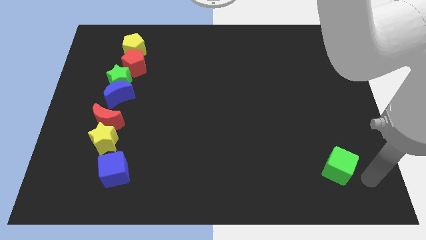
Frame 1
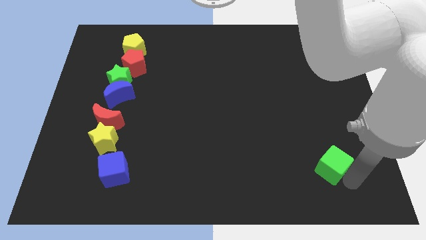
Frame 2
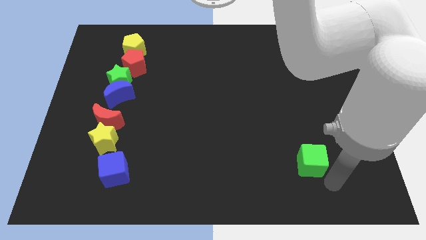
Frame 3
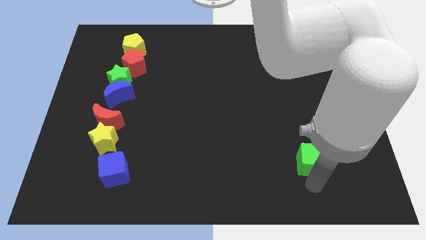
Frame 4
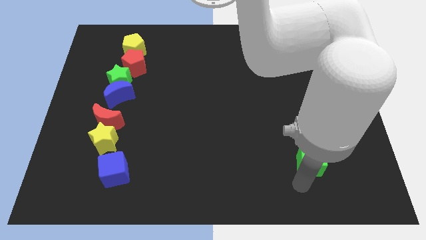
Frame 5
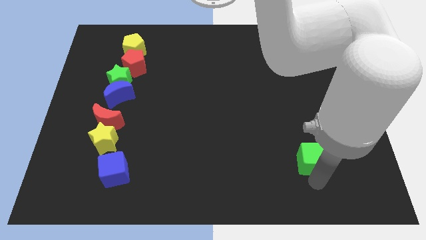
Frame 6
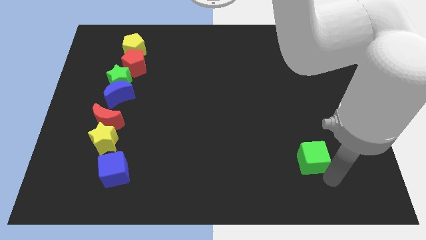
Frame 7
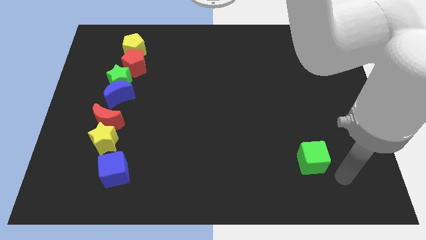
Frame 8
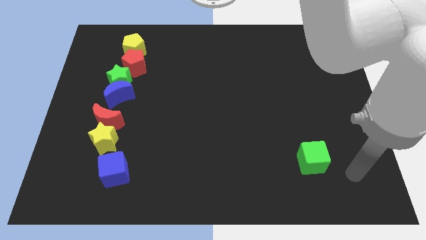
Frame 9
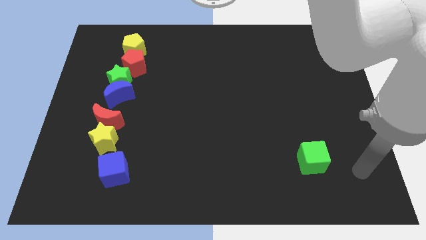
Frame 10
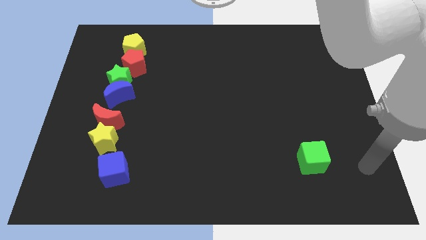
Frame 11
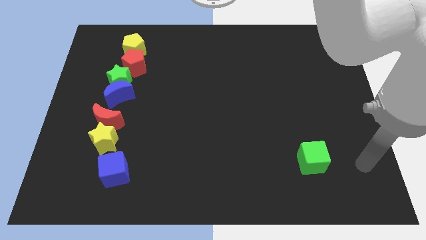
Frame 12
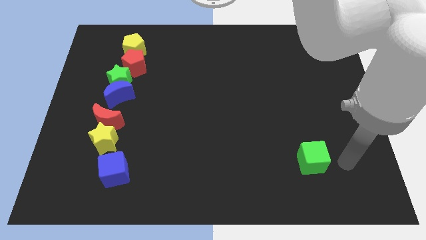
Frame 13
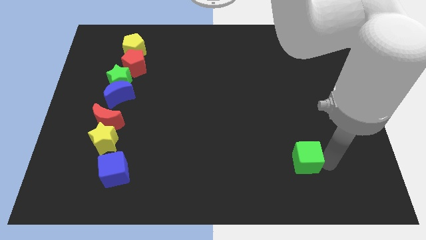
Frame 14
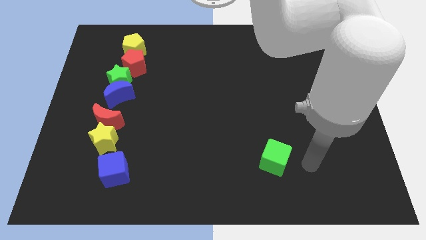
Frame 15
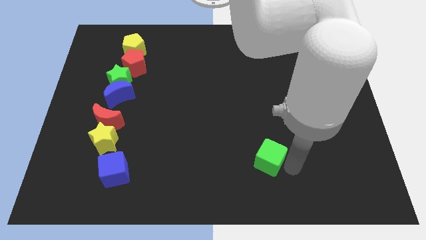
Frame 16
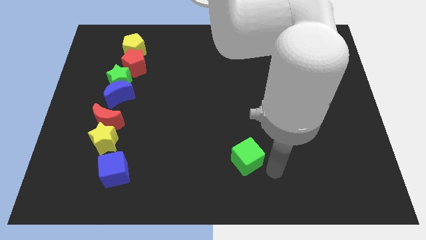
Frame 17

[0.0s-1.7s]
slide the green cube towards the blue cube

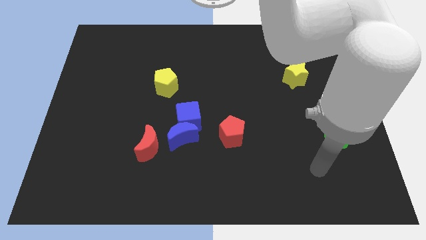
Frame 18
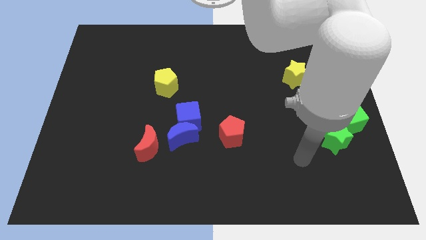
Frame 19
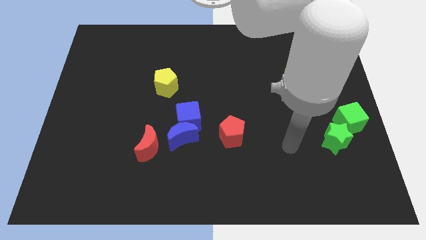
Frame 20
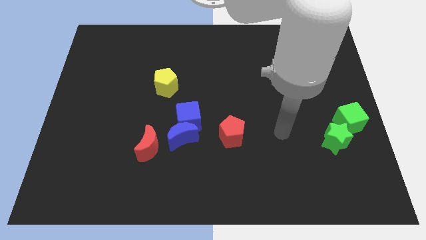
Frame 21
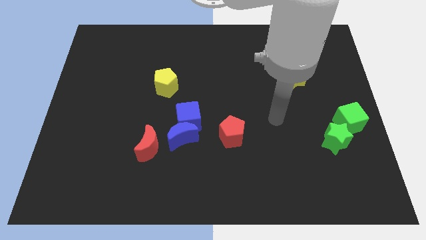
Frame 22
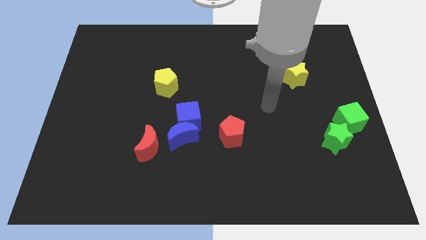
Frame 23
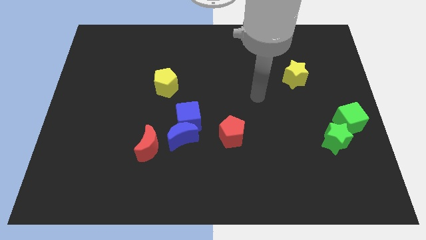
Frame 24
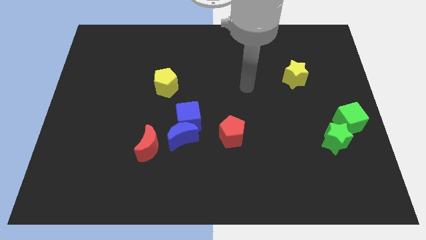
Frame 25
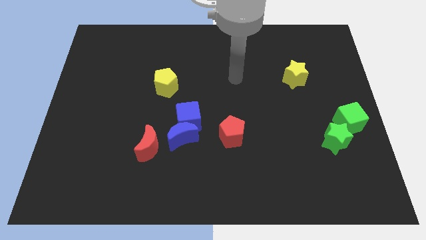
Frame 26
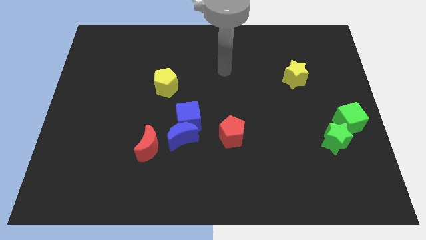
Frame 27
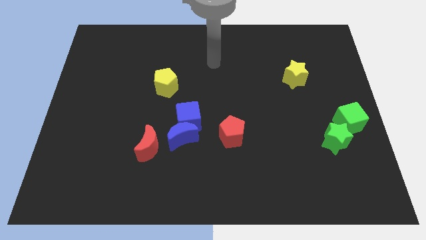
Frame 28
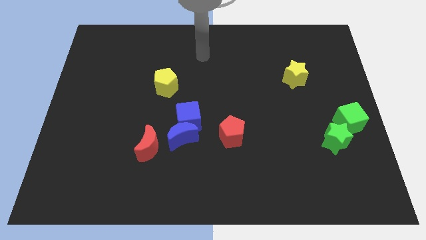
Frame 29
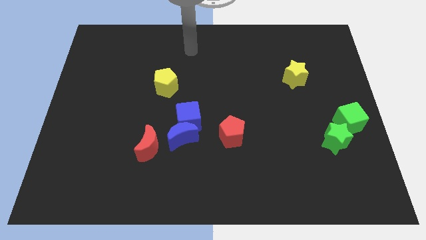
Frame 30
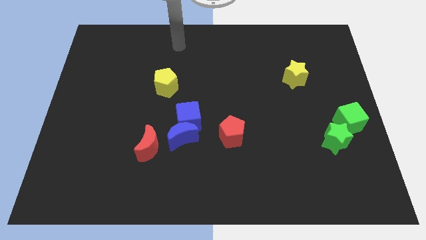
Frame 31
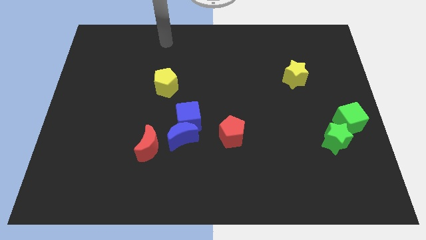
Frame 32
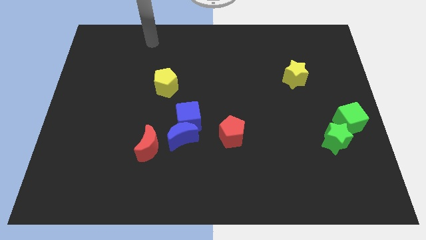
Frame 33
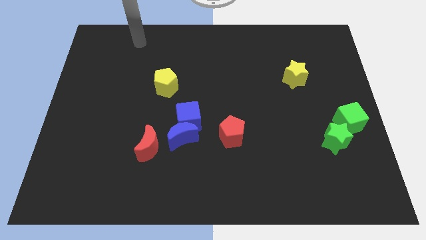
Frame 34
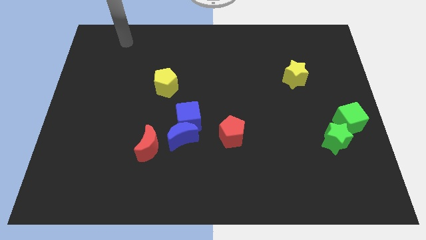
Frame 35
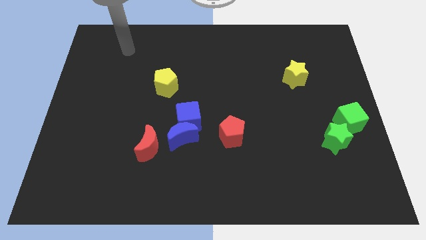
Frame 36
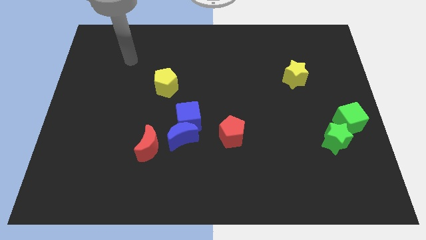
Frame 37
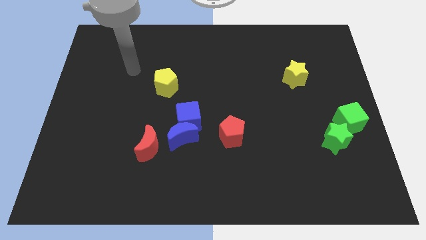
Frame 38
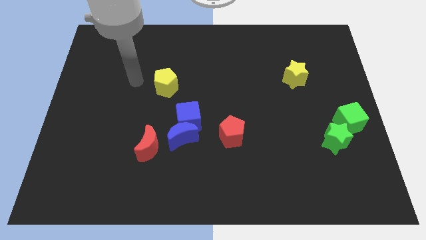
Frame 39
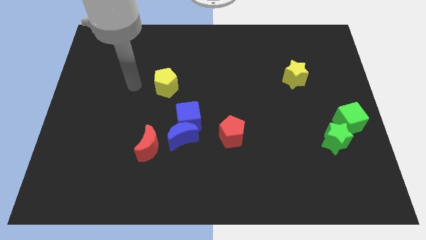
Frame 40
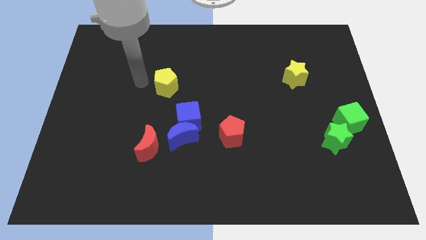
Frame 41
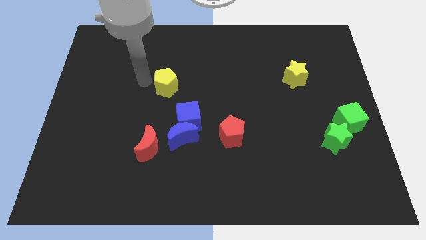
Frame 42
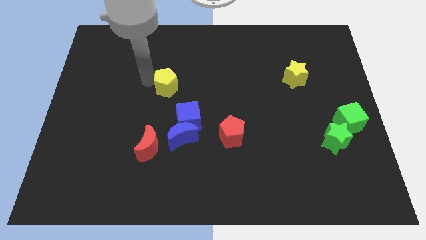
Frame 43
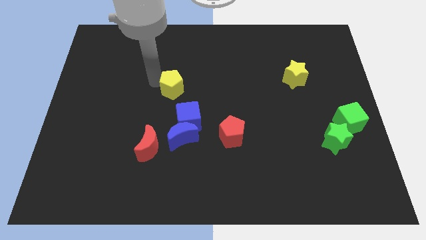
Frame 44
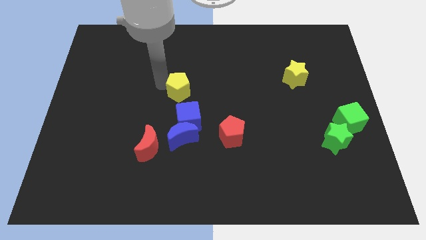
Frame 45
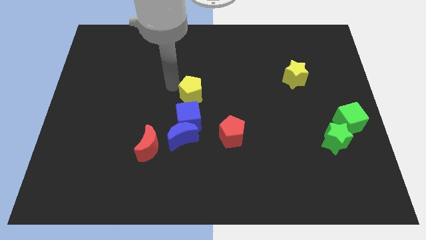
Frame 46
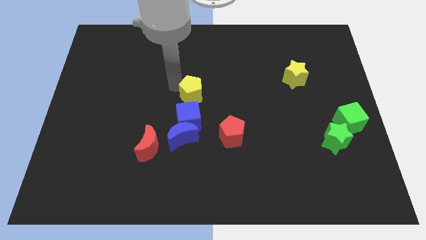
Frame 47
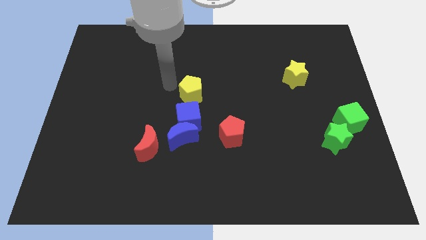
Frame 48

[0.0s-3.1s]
push the yellow pentagon to the top of the blue cube

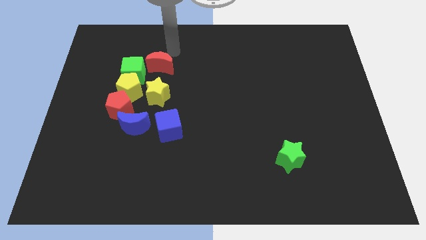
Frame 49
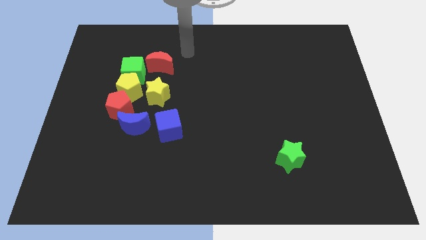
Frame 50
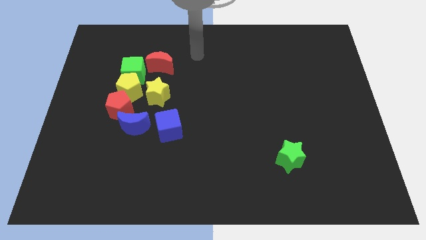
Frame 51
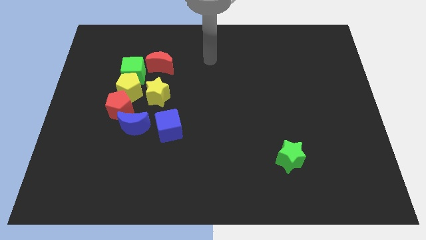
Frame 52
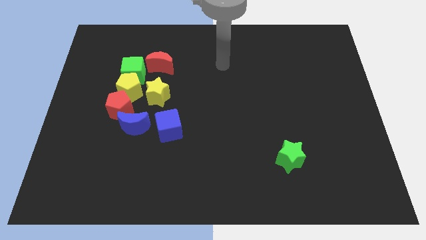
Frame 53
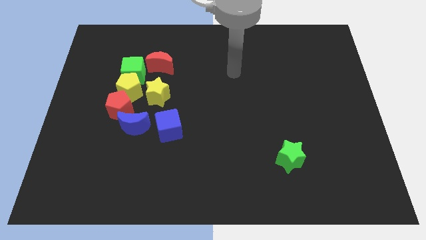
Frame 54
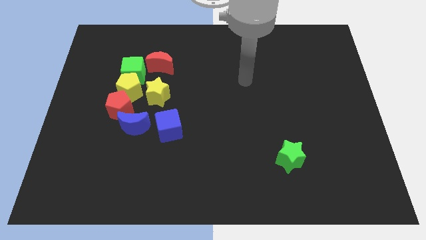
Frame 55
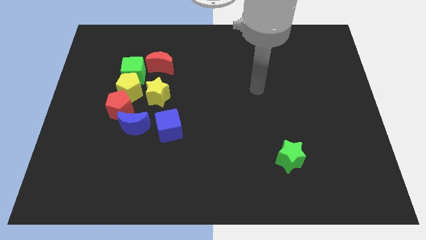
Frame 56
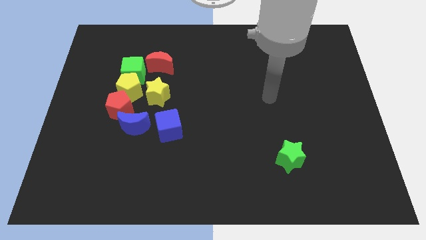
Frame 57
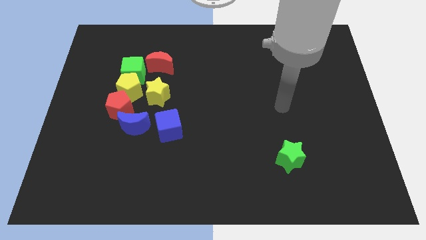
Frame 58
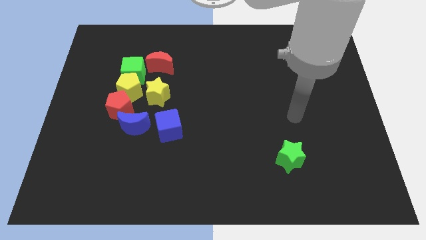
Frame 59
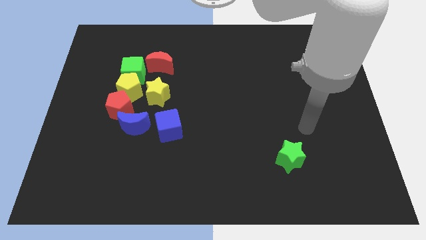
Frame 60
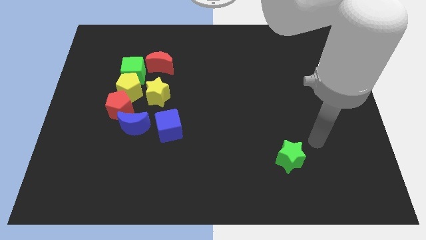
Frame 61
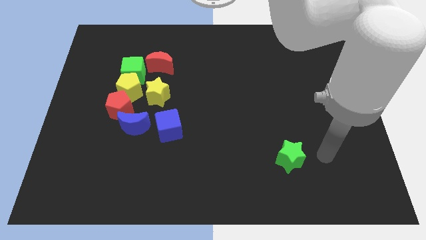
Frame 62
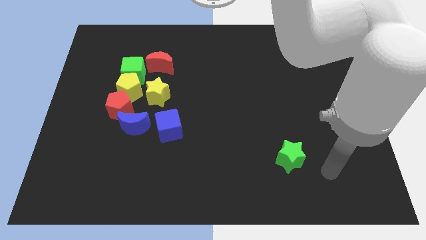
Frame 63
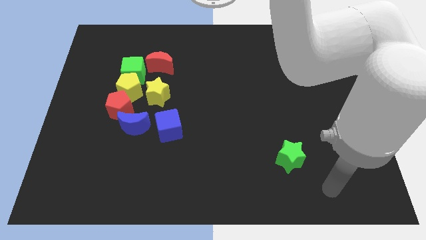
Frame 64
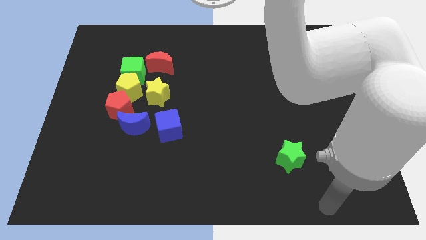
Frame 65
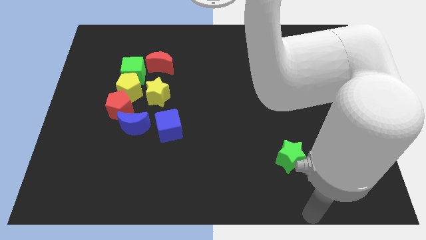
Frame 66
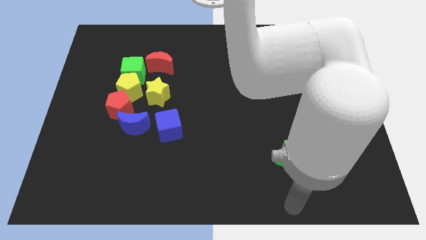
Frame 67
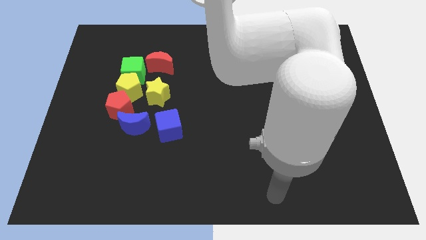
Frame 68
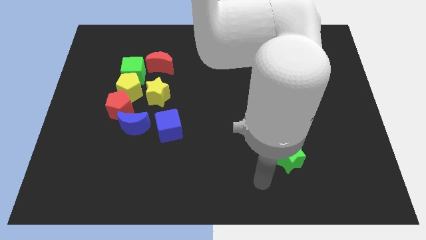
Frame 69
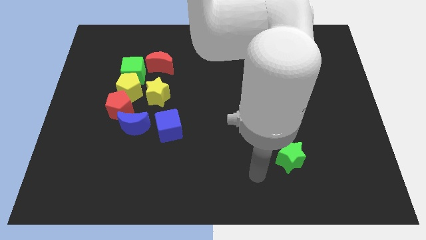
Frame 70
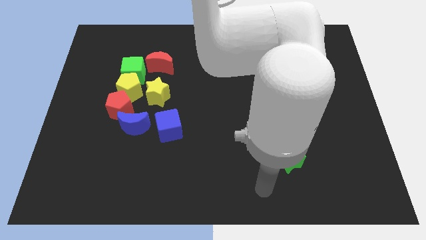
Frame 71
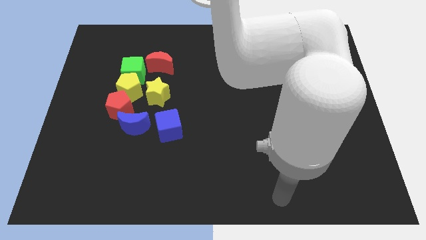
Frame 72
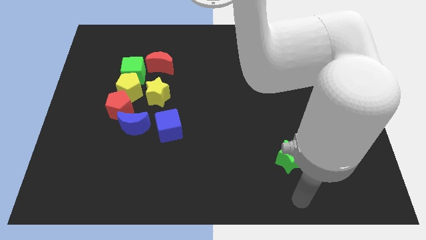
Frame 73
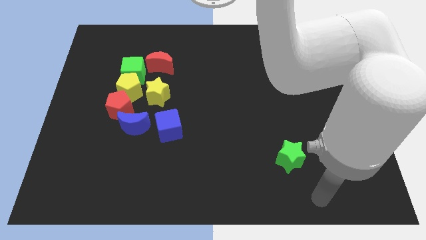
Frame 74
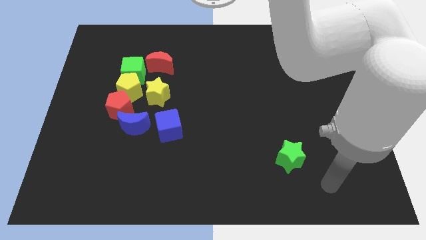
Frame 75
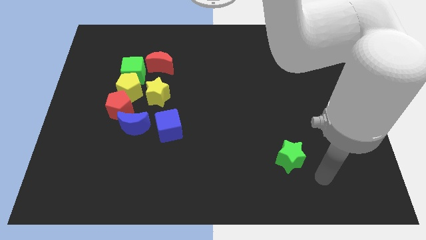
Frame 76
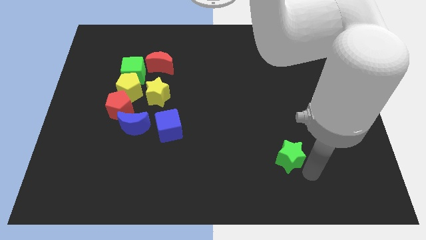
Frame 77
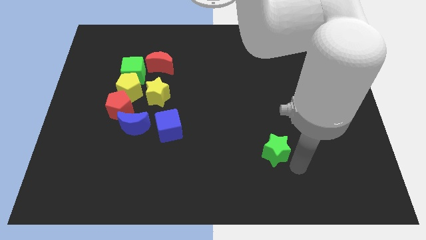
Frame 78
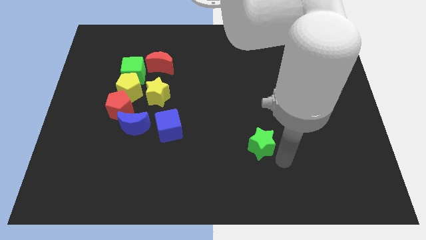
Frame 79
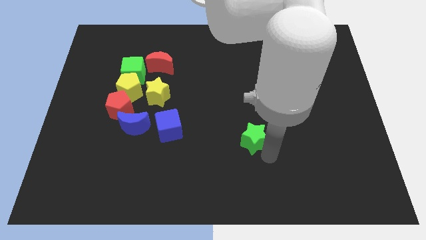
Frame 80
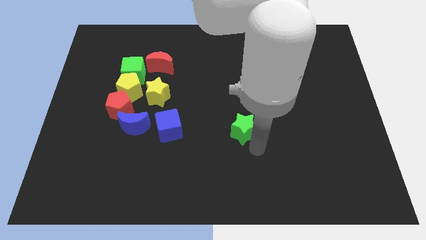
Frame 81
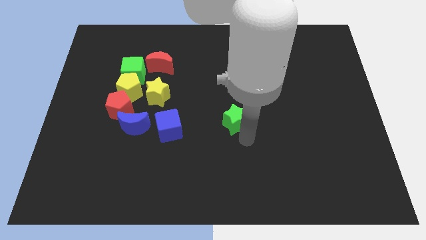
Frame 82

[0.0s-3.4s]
slide the green star to the right side of the blue cube

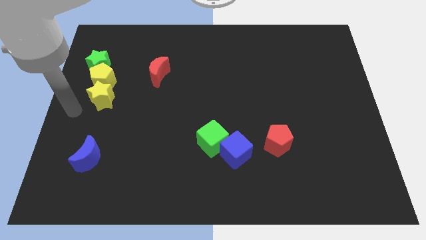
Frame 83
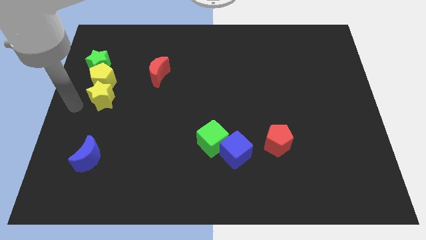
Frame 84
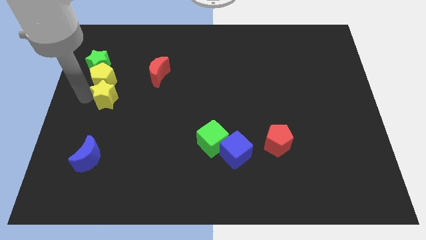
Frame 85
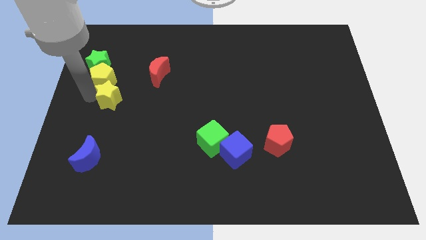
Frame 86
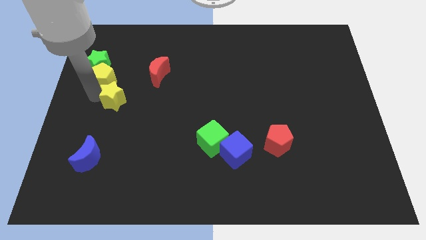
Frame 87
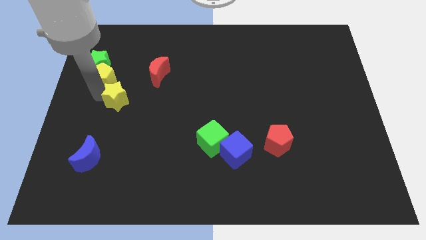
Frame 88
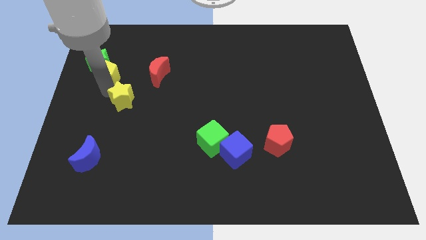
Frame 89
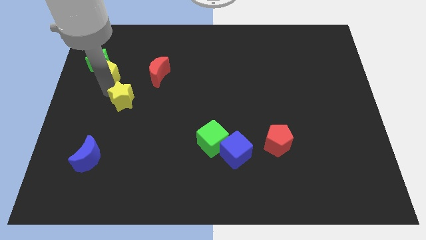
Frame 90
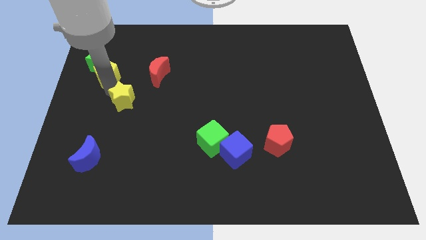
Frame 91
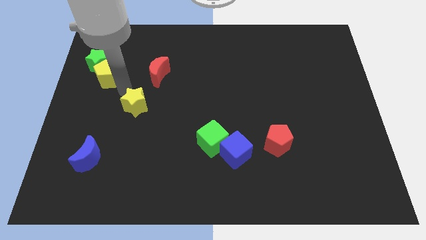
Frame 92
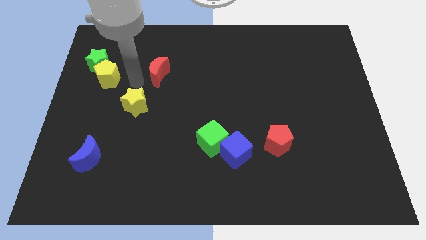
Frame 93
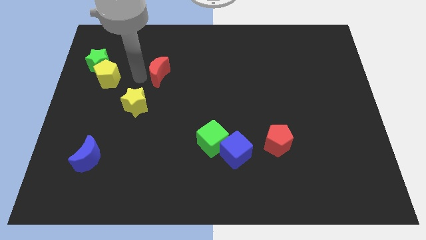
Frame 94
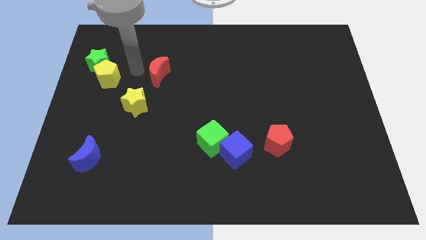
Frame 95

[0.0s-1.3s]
move yellow star diagonally right to yellow pentagon
